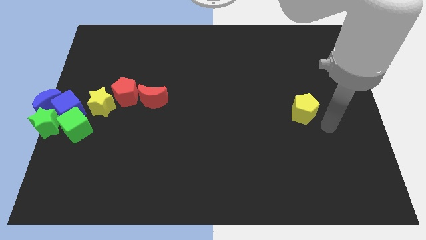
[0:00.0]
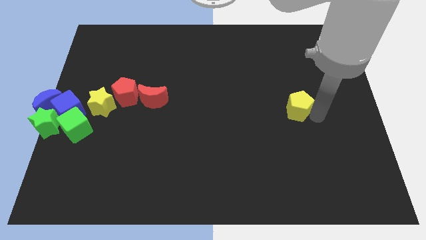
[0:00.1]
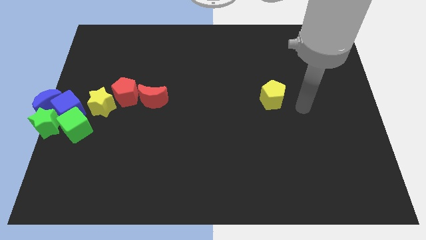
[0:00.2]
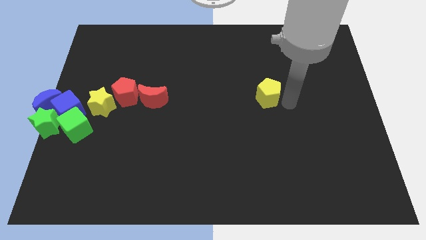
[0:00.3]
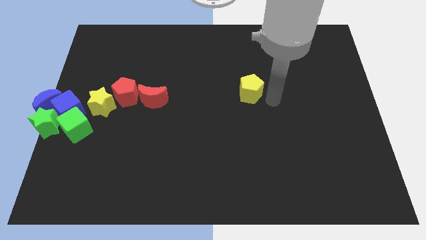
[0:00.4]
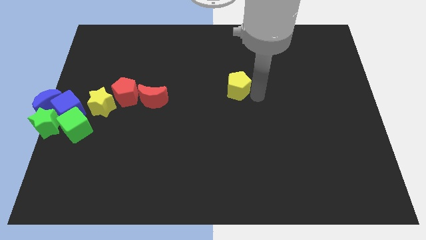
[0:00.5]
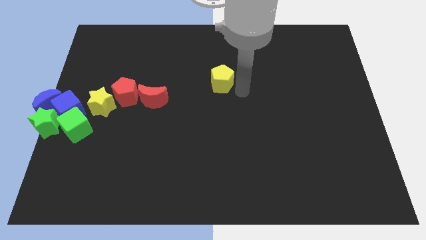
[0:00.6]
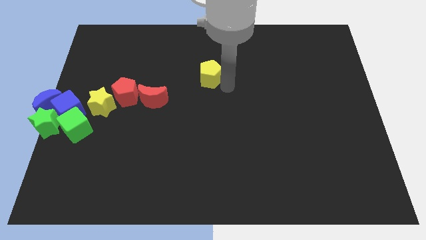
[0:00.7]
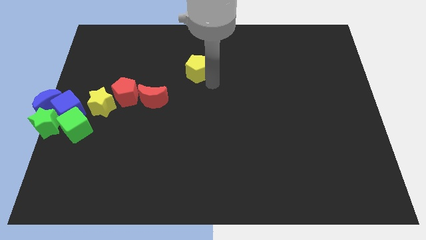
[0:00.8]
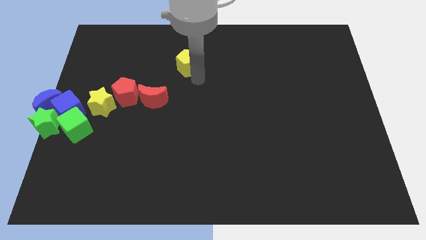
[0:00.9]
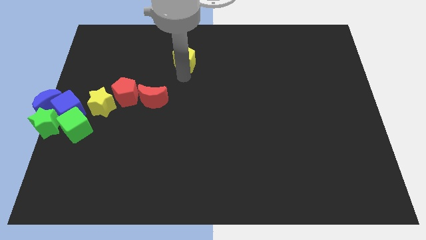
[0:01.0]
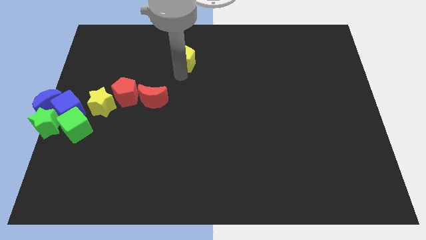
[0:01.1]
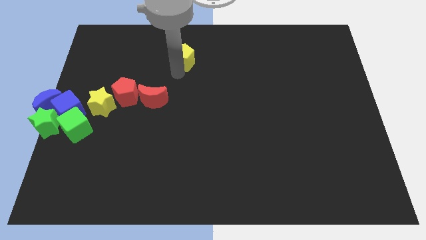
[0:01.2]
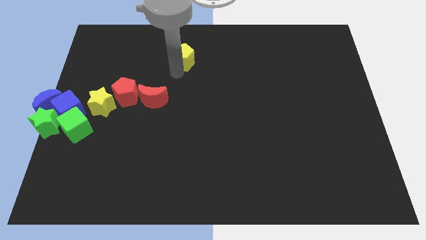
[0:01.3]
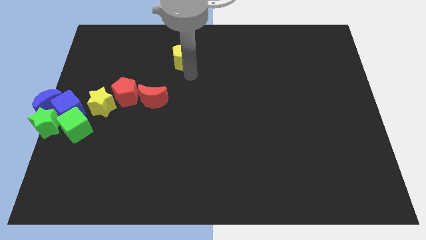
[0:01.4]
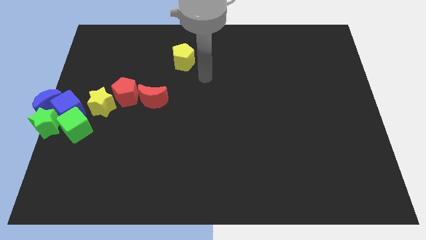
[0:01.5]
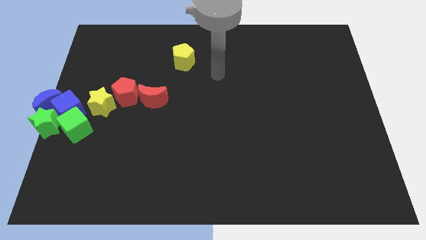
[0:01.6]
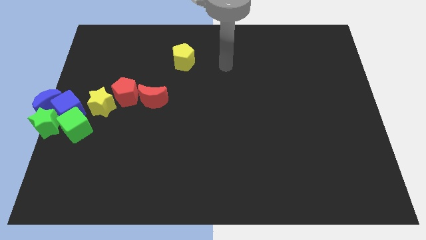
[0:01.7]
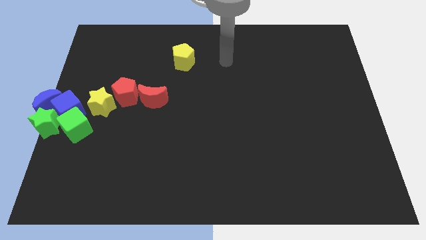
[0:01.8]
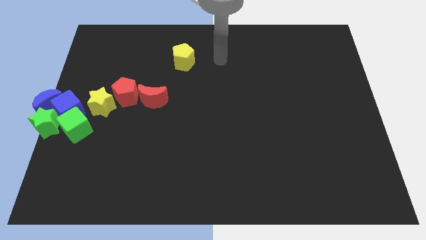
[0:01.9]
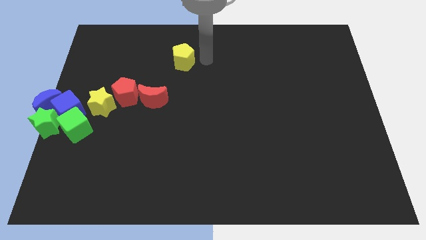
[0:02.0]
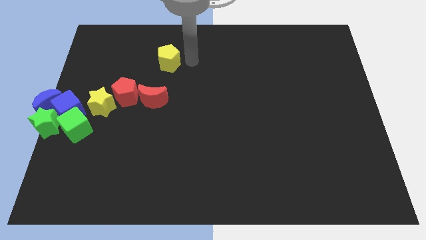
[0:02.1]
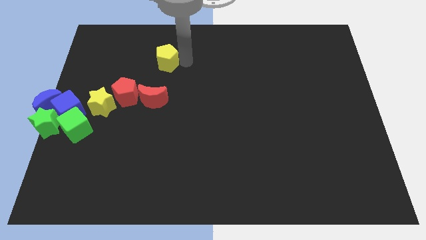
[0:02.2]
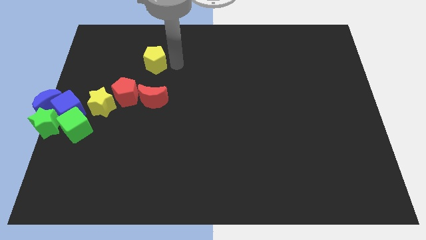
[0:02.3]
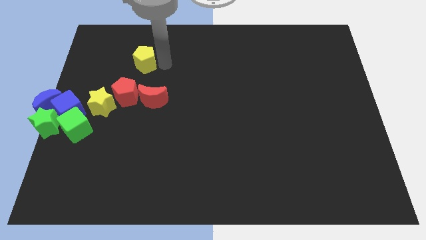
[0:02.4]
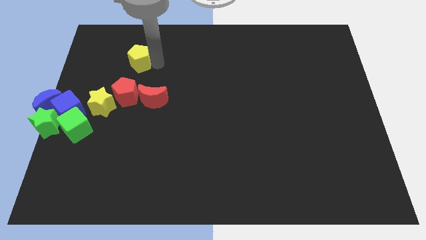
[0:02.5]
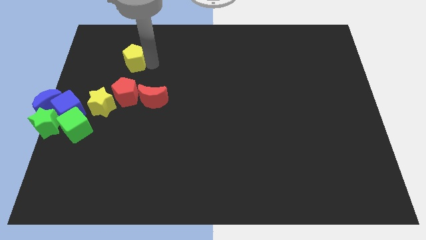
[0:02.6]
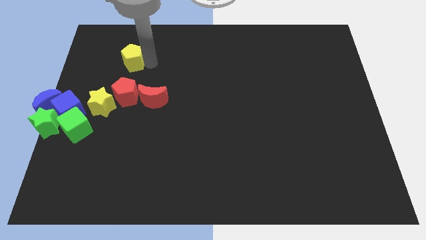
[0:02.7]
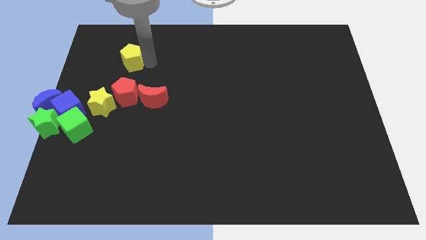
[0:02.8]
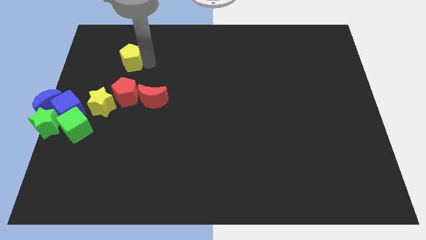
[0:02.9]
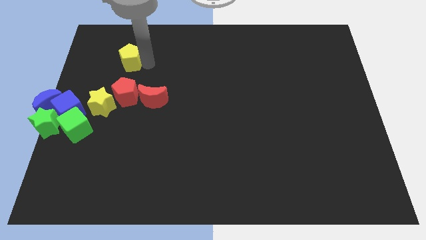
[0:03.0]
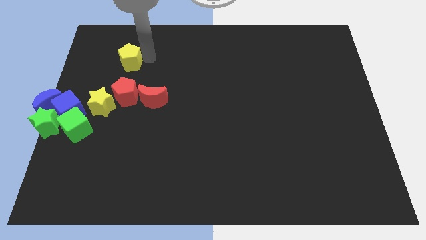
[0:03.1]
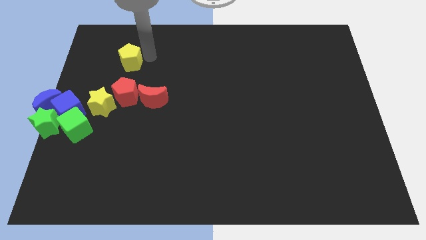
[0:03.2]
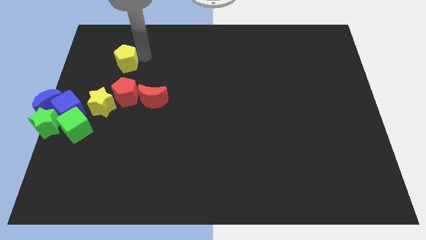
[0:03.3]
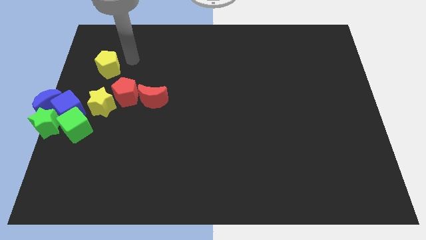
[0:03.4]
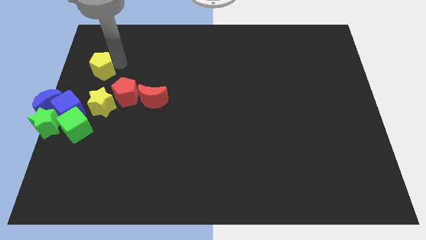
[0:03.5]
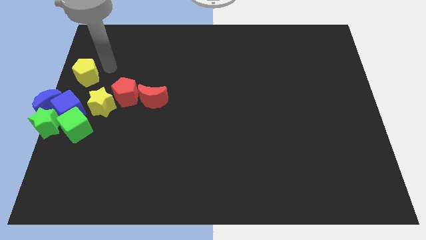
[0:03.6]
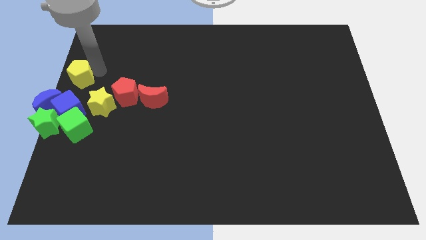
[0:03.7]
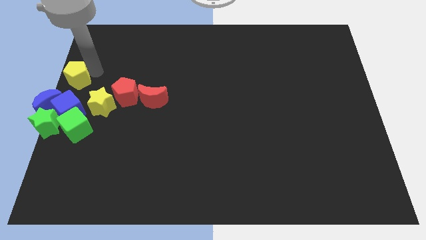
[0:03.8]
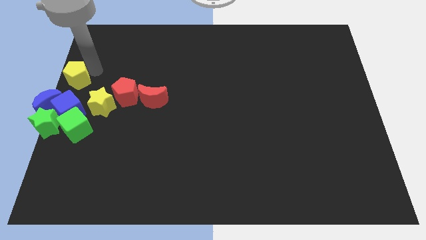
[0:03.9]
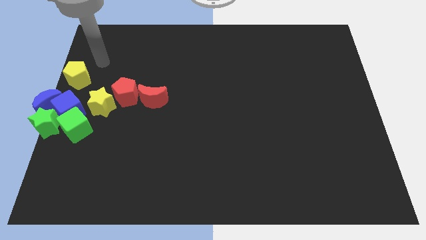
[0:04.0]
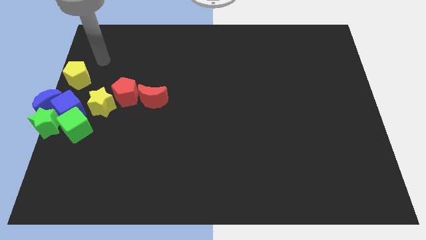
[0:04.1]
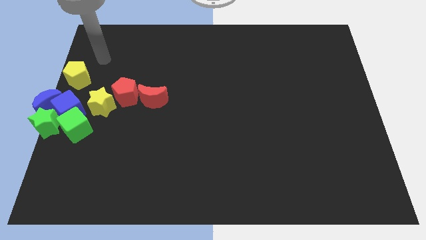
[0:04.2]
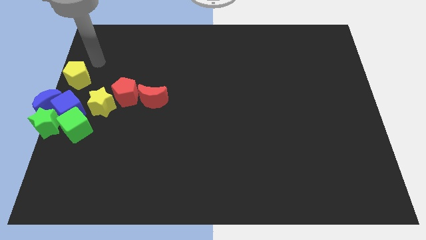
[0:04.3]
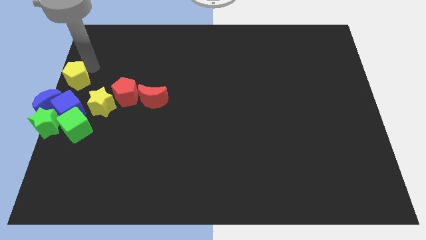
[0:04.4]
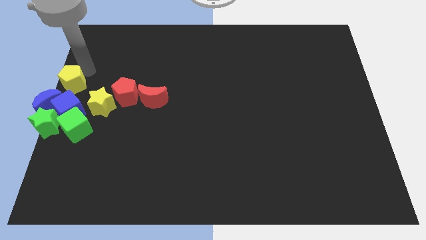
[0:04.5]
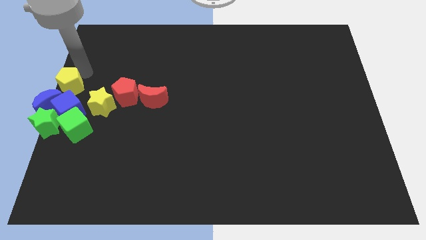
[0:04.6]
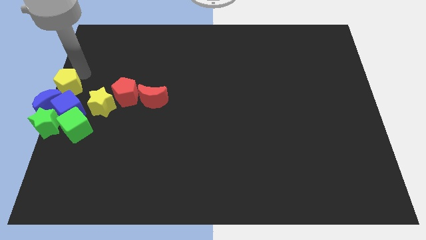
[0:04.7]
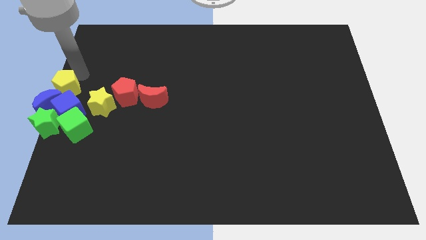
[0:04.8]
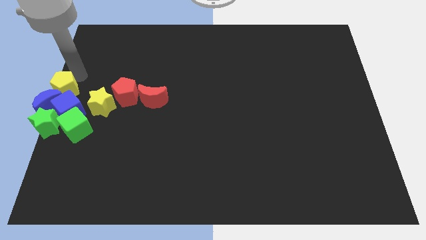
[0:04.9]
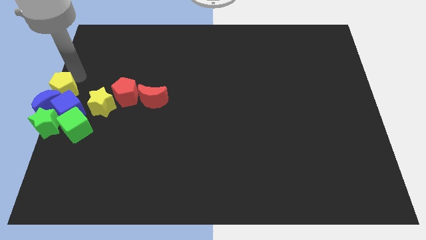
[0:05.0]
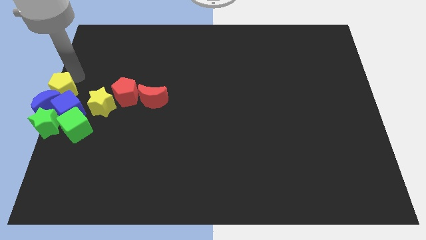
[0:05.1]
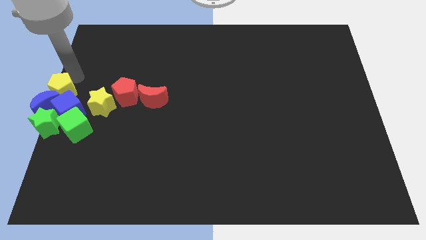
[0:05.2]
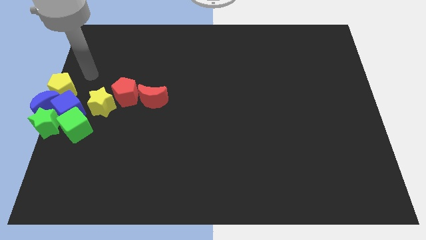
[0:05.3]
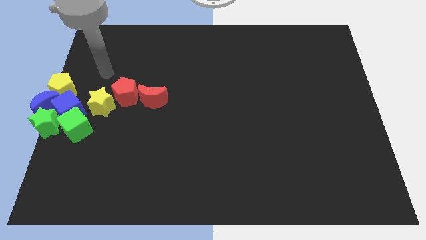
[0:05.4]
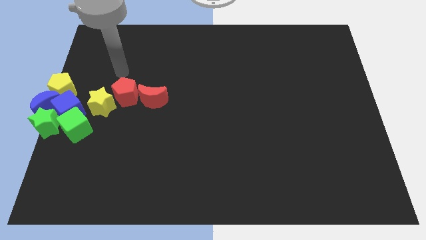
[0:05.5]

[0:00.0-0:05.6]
move the yellow pentagon at the top of the blue moon

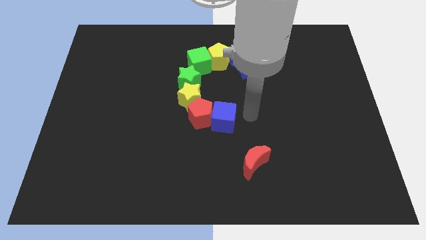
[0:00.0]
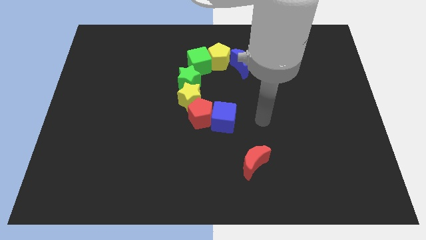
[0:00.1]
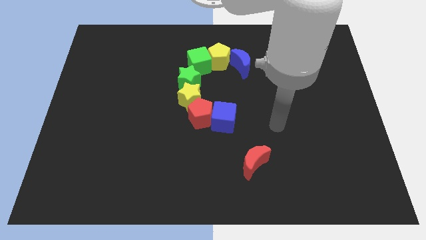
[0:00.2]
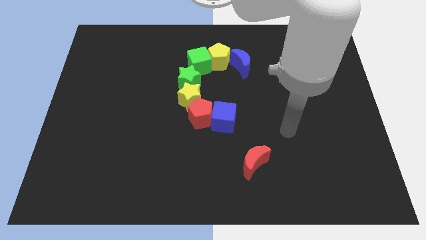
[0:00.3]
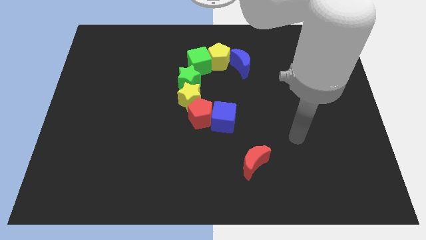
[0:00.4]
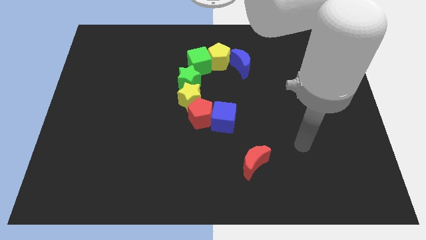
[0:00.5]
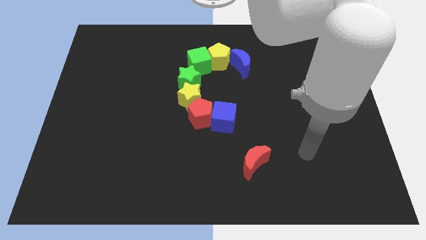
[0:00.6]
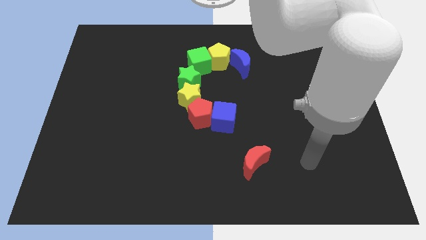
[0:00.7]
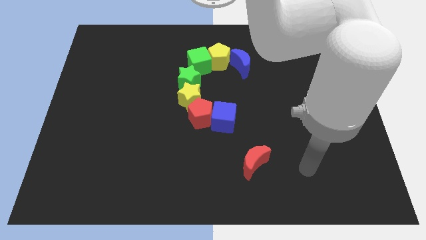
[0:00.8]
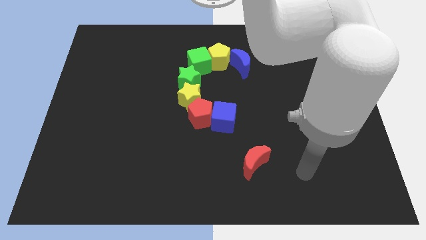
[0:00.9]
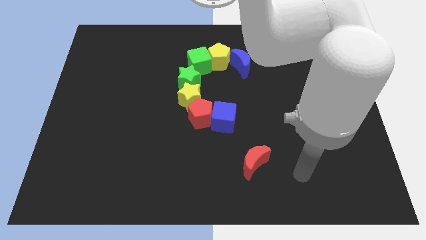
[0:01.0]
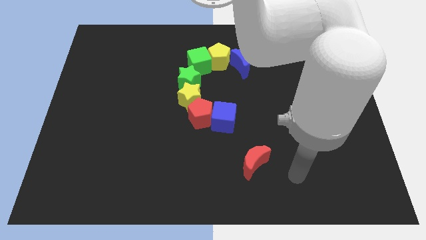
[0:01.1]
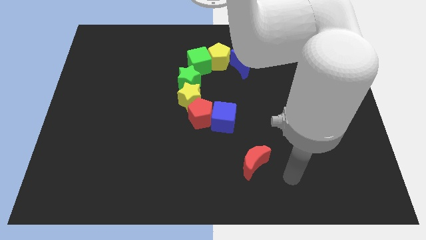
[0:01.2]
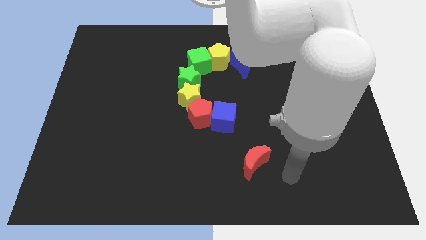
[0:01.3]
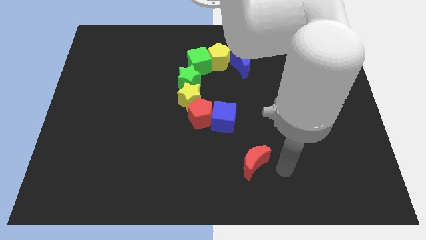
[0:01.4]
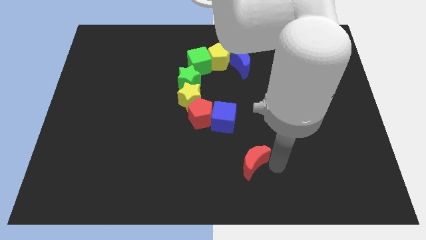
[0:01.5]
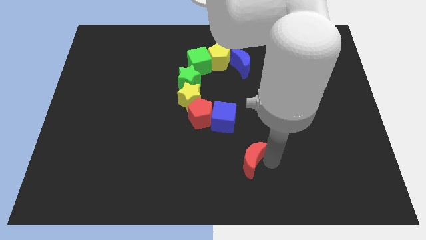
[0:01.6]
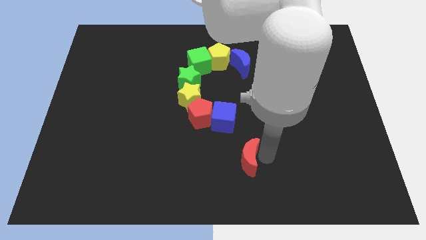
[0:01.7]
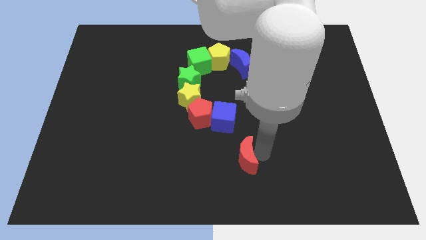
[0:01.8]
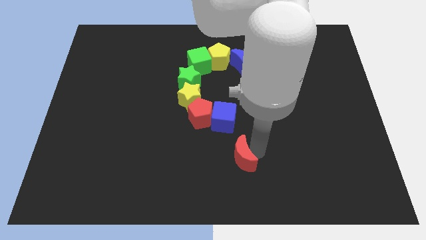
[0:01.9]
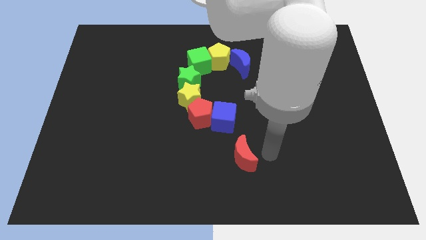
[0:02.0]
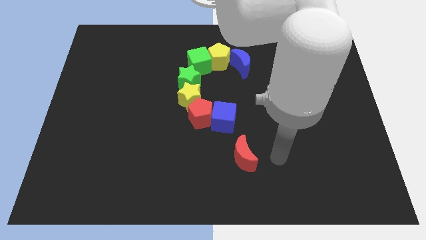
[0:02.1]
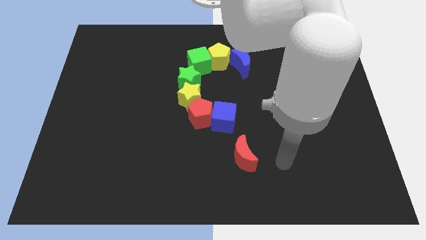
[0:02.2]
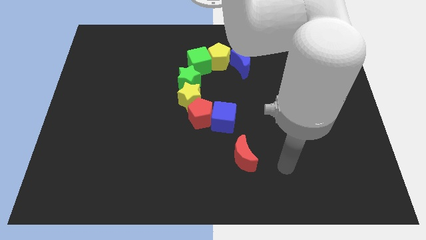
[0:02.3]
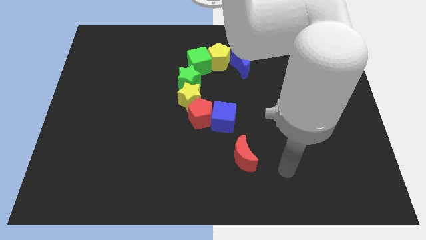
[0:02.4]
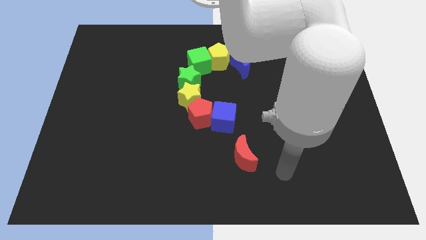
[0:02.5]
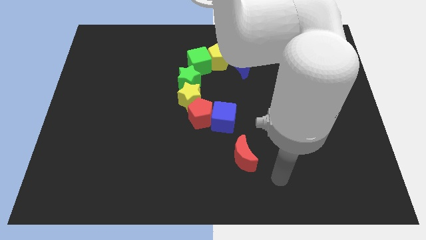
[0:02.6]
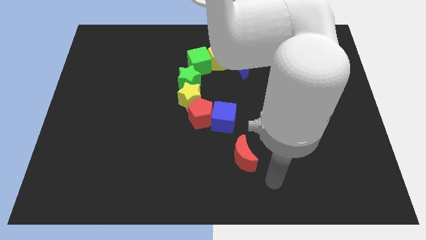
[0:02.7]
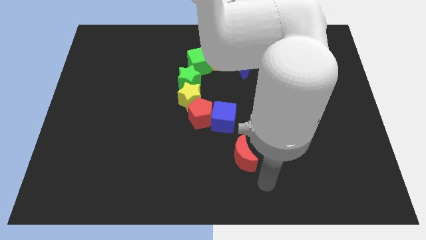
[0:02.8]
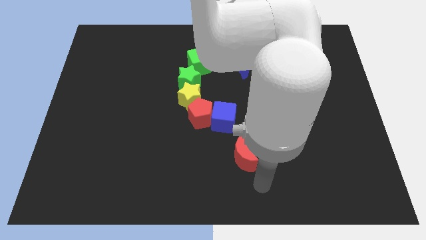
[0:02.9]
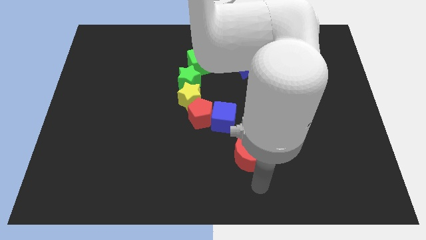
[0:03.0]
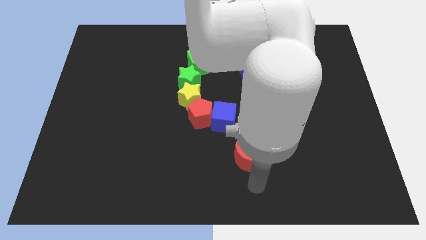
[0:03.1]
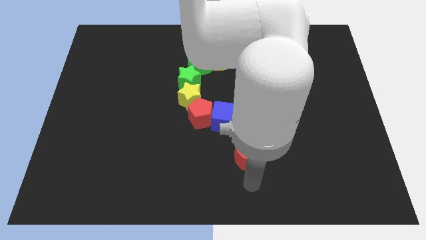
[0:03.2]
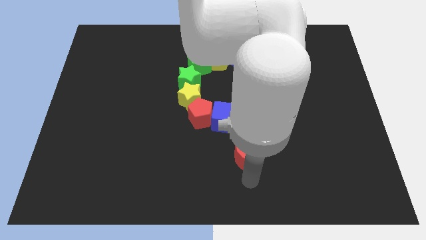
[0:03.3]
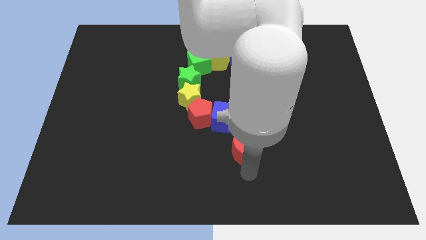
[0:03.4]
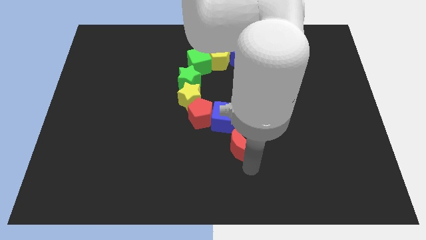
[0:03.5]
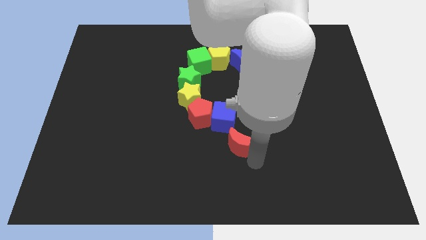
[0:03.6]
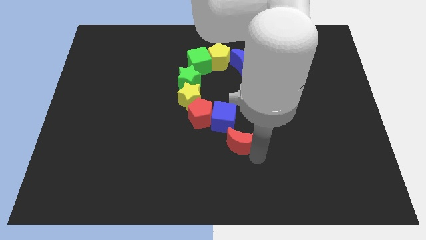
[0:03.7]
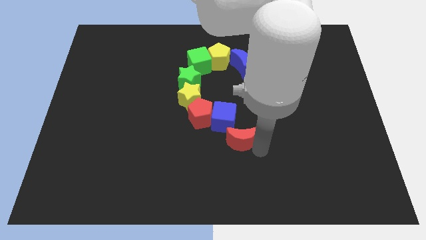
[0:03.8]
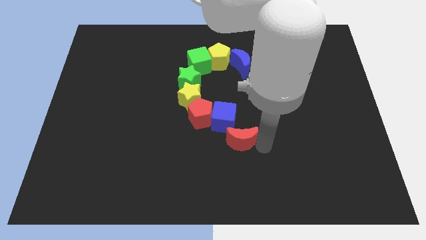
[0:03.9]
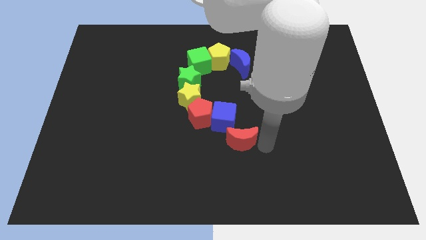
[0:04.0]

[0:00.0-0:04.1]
move the red crescent towards the bottom of the blue cube
